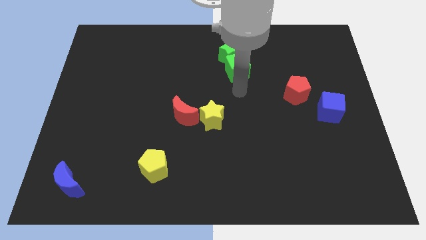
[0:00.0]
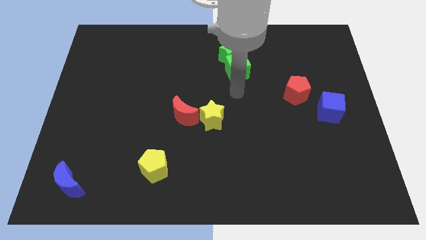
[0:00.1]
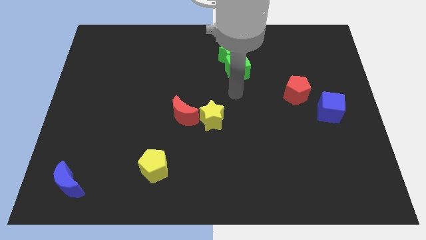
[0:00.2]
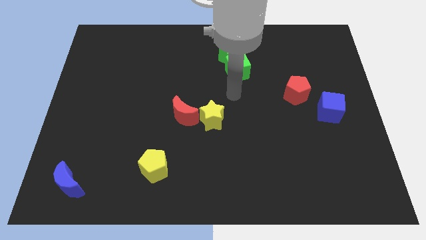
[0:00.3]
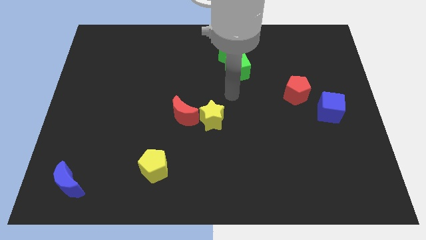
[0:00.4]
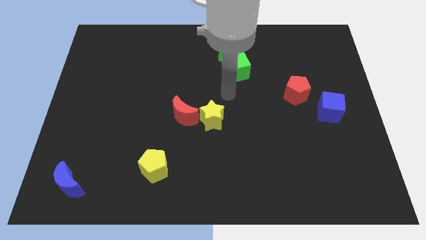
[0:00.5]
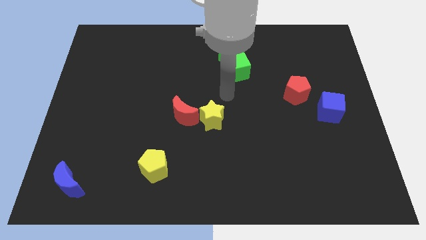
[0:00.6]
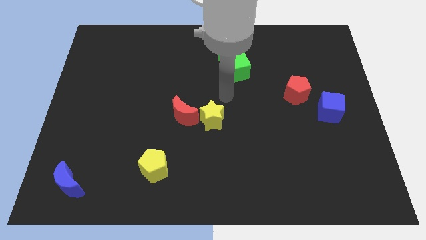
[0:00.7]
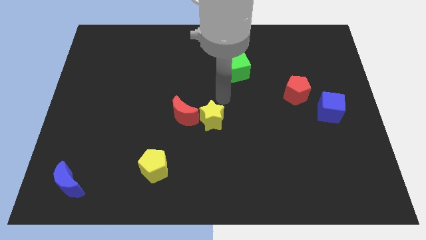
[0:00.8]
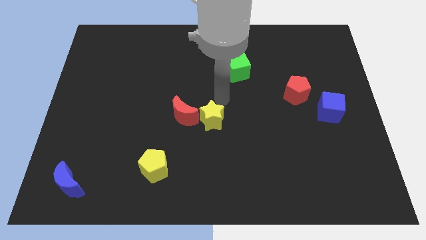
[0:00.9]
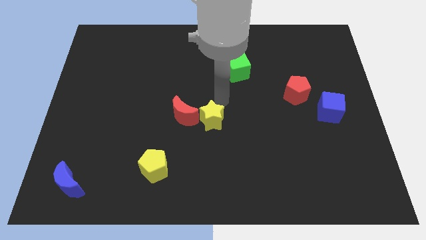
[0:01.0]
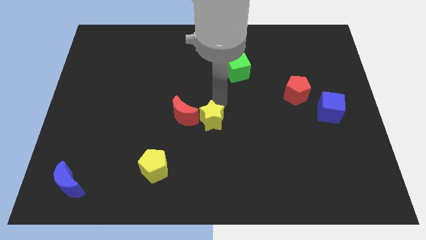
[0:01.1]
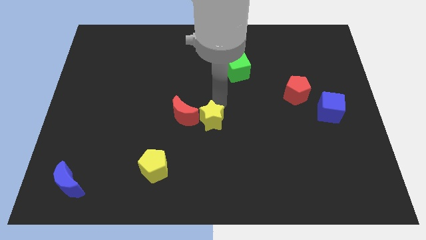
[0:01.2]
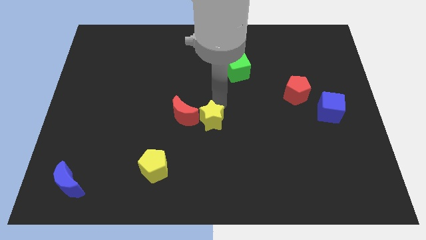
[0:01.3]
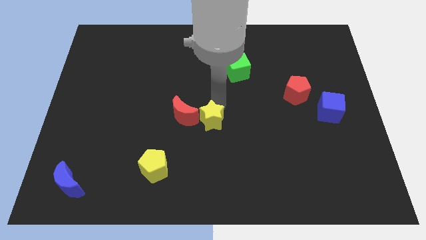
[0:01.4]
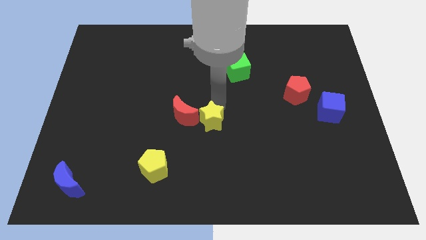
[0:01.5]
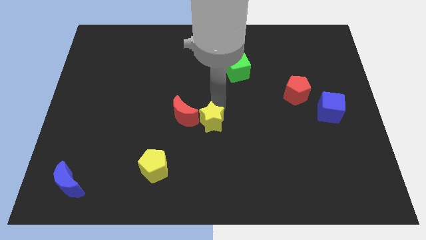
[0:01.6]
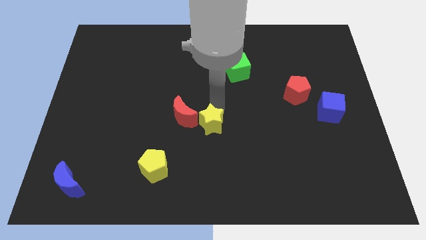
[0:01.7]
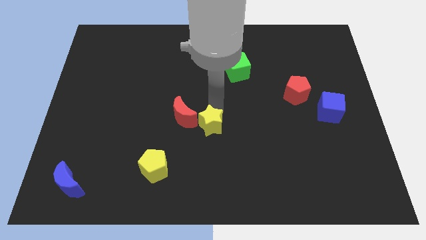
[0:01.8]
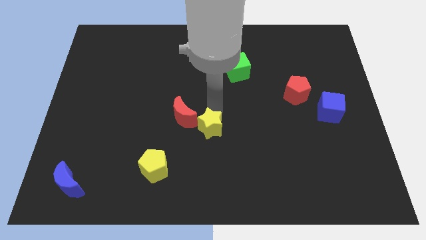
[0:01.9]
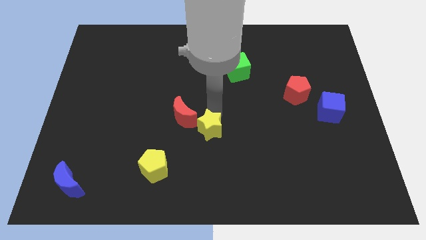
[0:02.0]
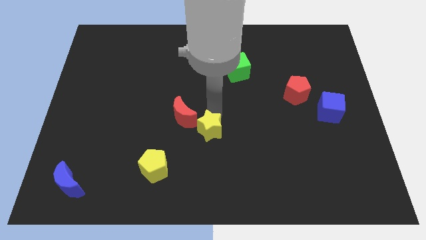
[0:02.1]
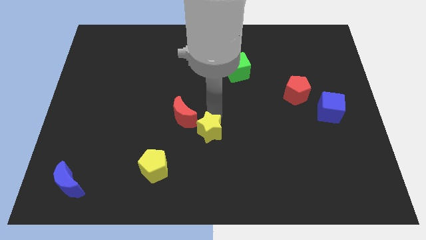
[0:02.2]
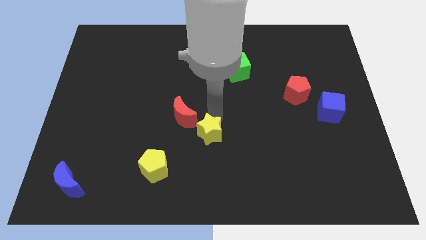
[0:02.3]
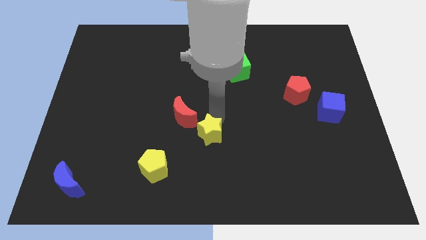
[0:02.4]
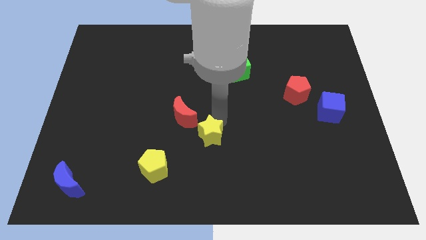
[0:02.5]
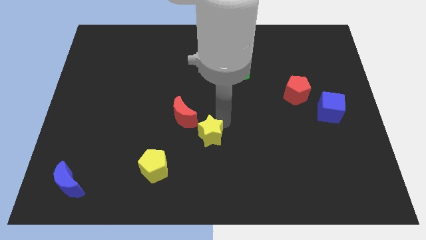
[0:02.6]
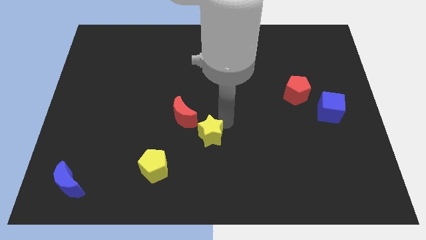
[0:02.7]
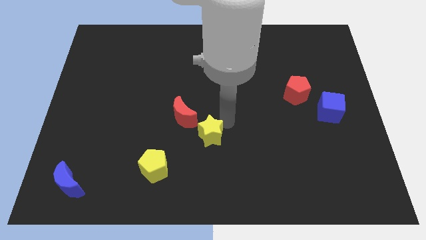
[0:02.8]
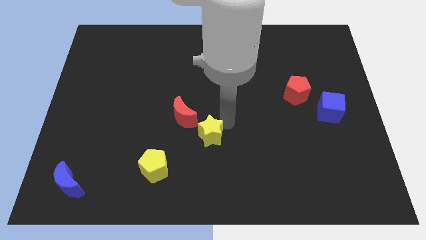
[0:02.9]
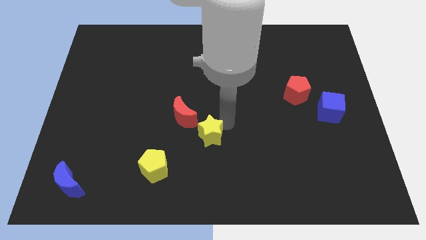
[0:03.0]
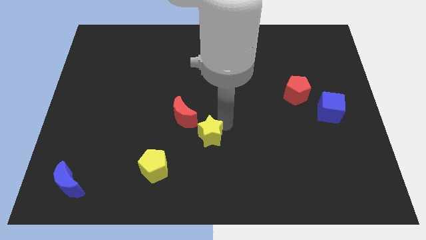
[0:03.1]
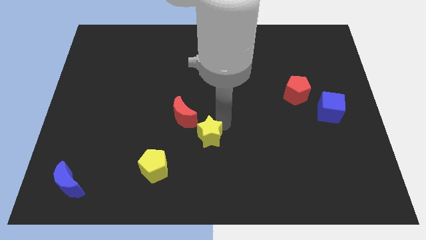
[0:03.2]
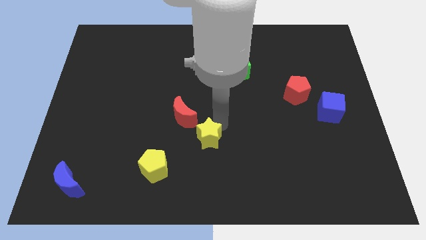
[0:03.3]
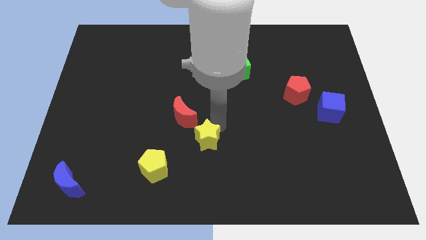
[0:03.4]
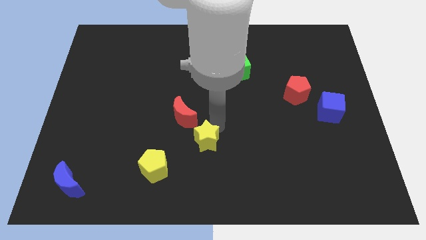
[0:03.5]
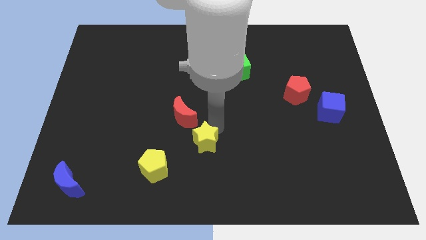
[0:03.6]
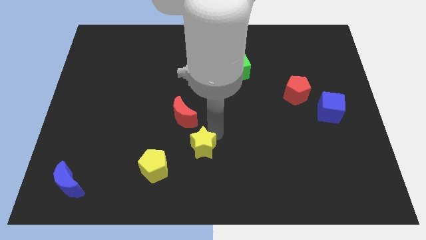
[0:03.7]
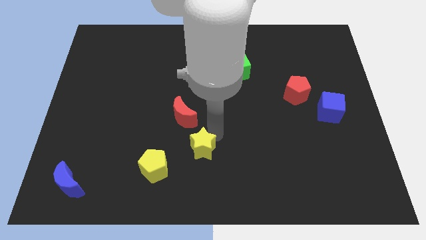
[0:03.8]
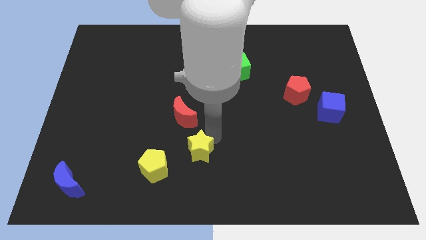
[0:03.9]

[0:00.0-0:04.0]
move the yellow star away from the red crescent

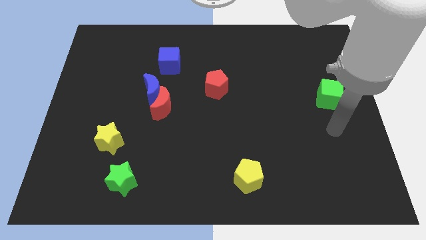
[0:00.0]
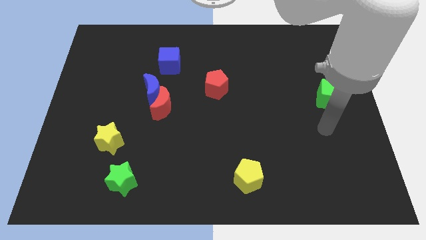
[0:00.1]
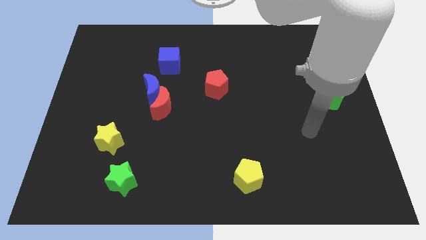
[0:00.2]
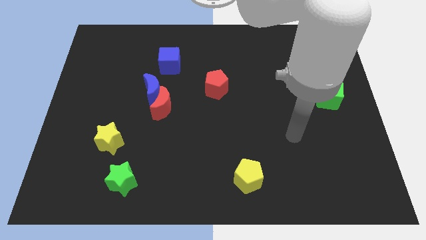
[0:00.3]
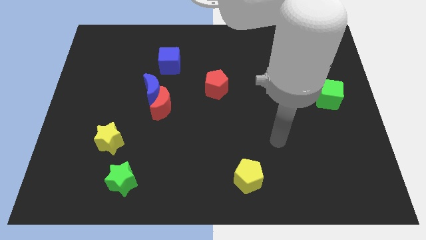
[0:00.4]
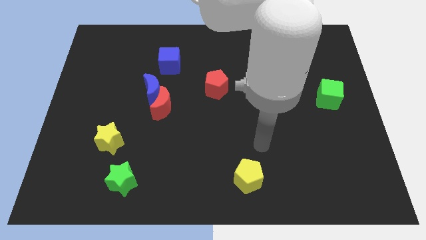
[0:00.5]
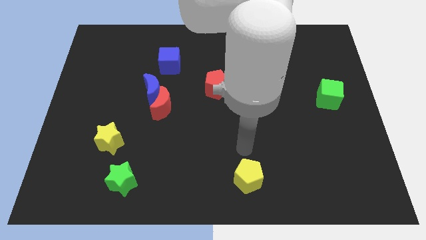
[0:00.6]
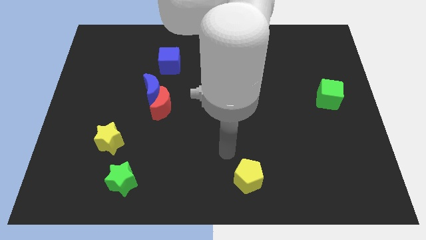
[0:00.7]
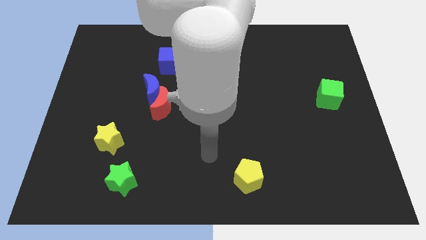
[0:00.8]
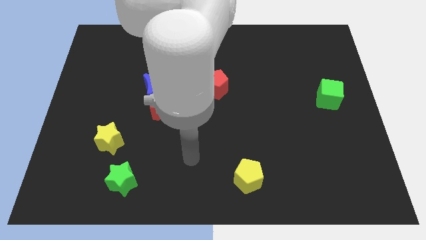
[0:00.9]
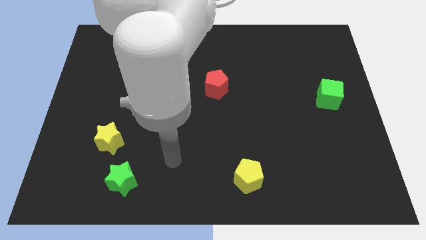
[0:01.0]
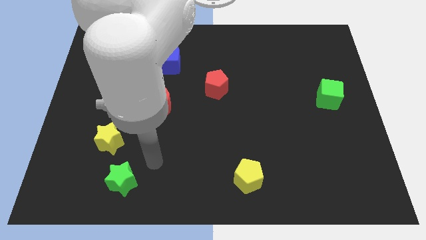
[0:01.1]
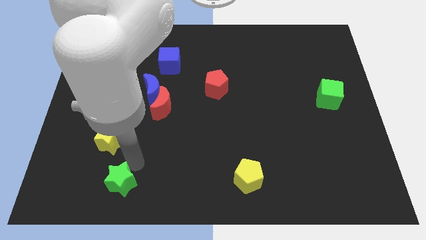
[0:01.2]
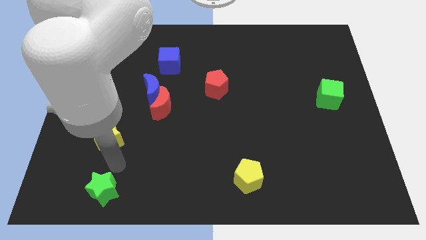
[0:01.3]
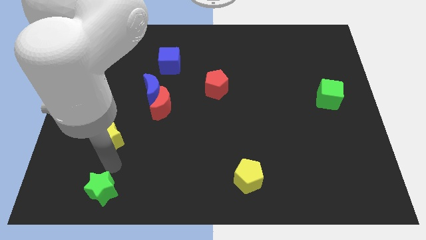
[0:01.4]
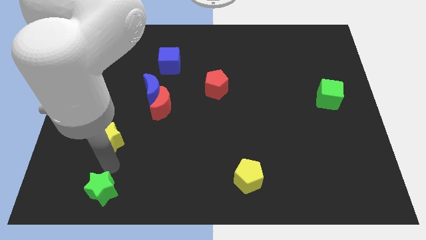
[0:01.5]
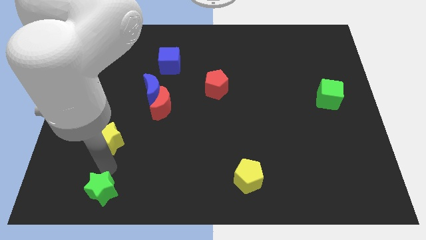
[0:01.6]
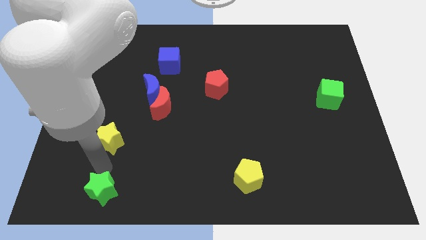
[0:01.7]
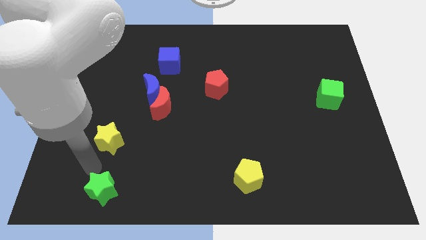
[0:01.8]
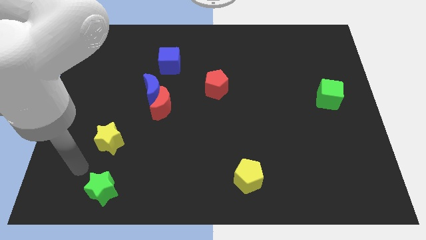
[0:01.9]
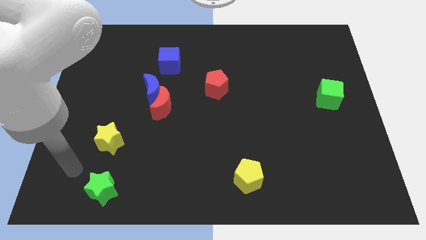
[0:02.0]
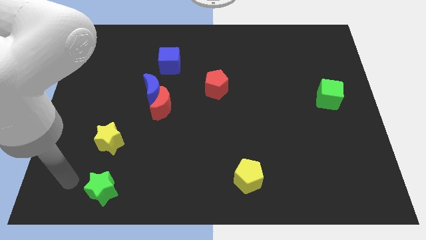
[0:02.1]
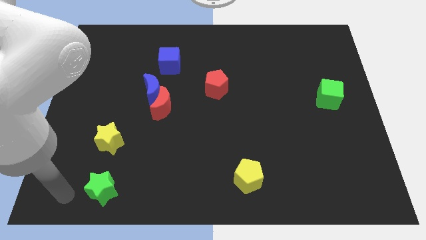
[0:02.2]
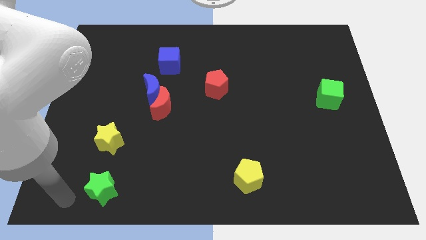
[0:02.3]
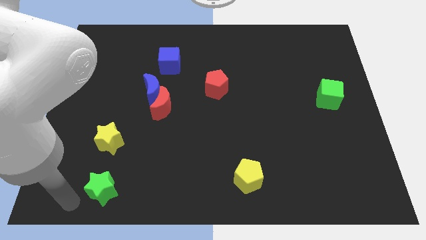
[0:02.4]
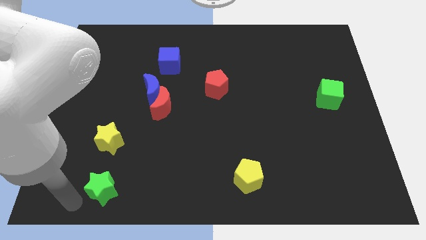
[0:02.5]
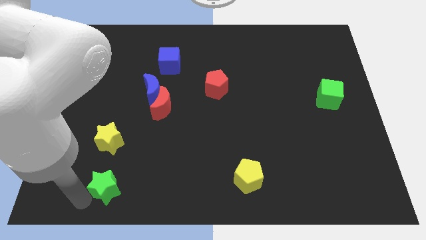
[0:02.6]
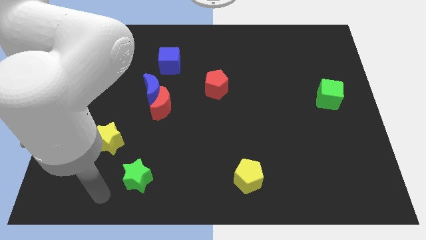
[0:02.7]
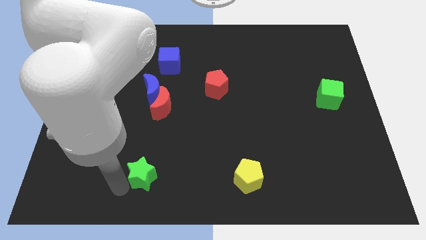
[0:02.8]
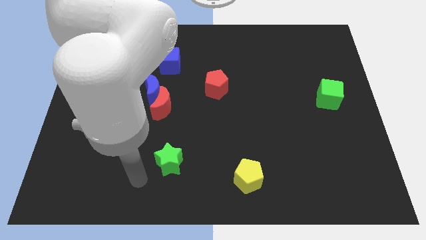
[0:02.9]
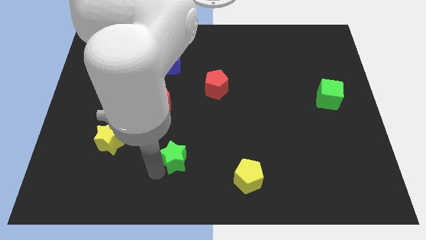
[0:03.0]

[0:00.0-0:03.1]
place the green star in between the yellow blocks

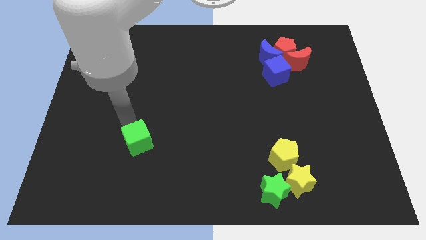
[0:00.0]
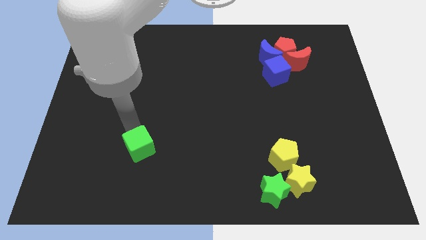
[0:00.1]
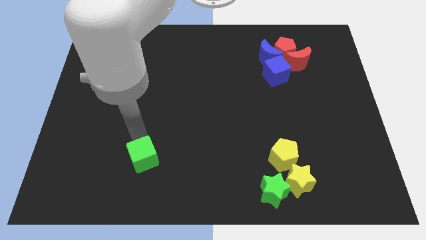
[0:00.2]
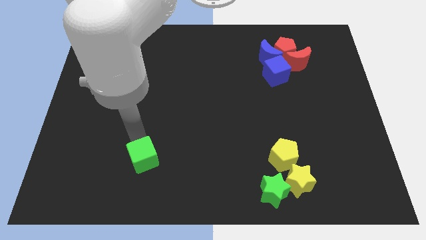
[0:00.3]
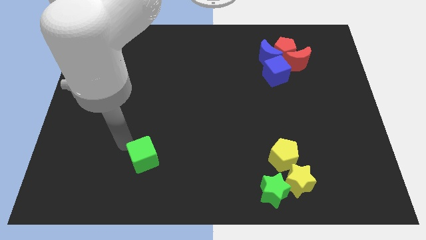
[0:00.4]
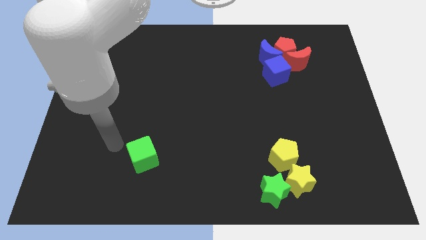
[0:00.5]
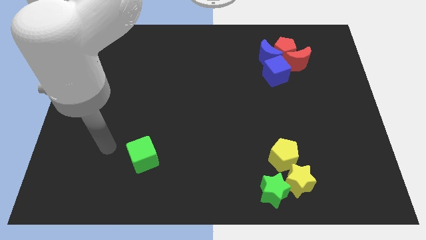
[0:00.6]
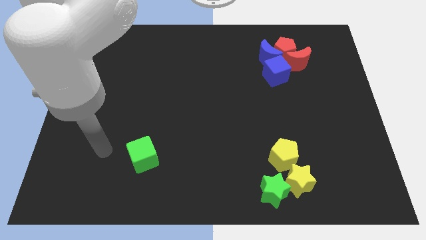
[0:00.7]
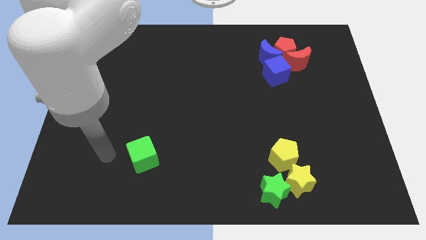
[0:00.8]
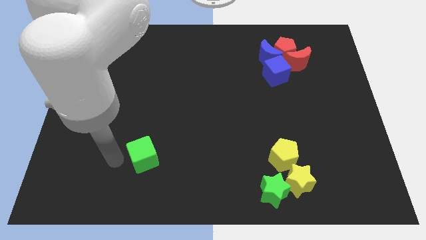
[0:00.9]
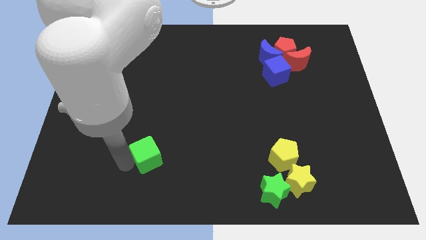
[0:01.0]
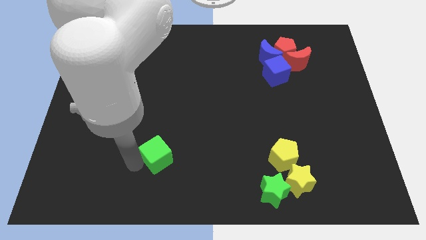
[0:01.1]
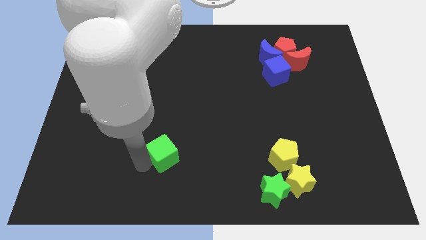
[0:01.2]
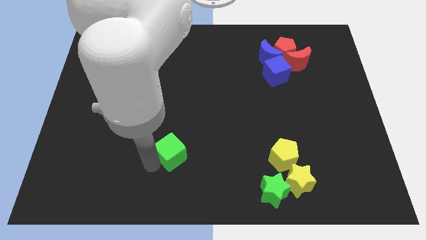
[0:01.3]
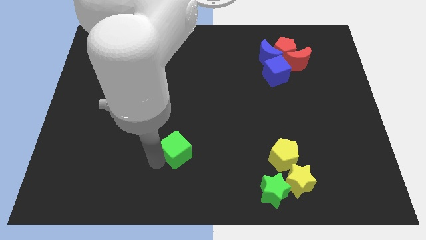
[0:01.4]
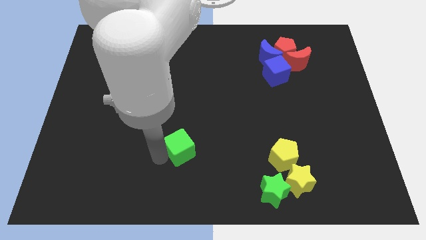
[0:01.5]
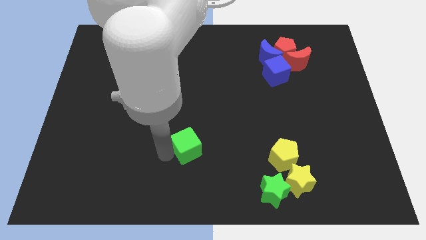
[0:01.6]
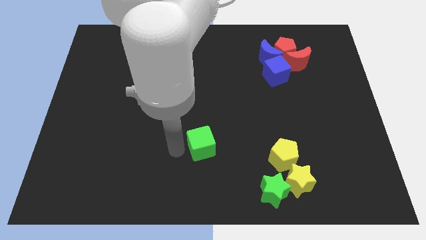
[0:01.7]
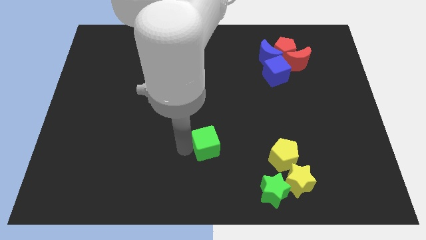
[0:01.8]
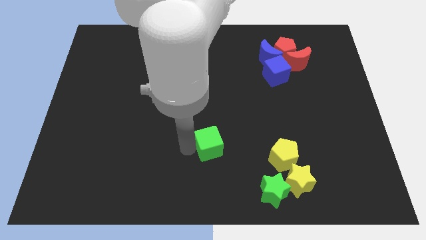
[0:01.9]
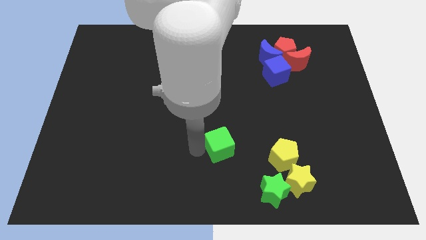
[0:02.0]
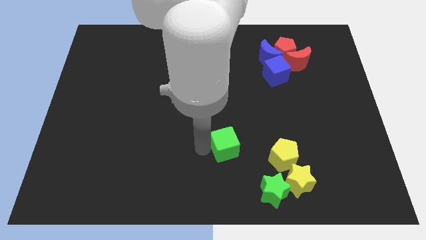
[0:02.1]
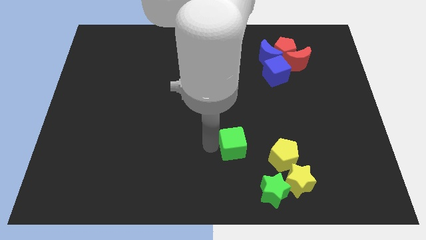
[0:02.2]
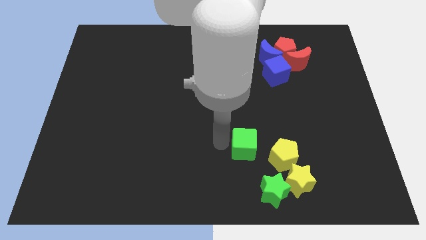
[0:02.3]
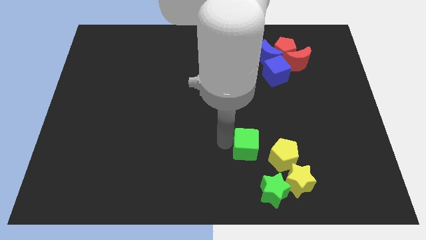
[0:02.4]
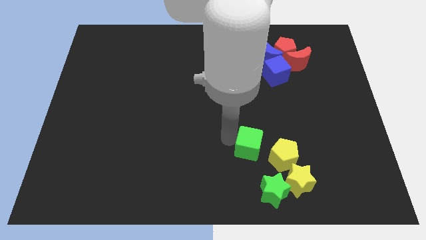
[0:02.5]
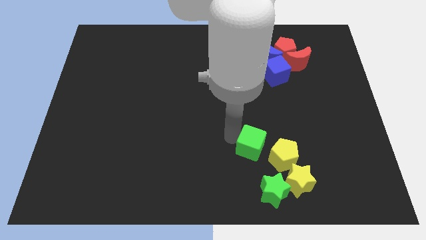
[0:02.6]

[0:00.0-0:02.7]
push the green cube towards yellow pentagon
